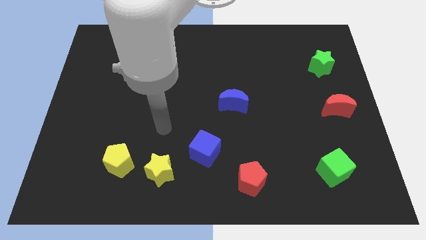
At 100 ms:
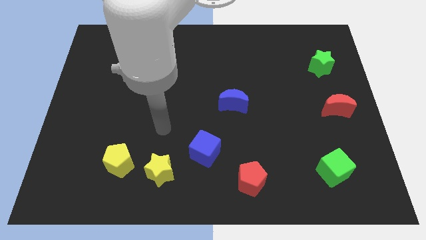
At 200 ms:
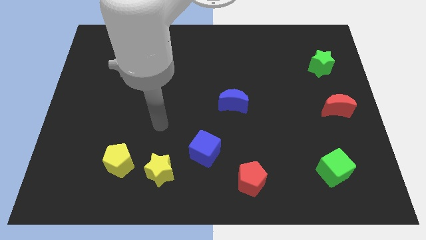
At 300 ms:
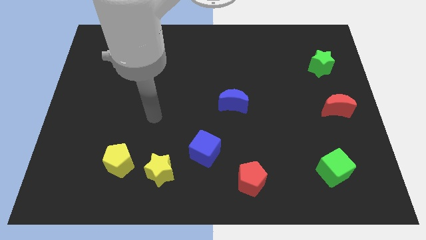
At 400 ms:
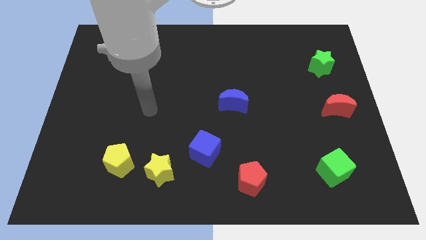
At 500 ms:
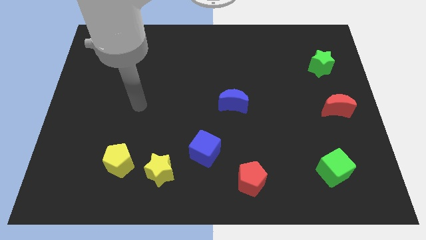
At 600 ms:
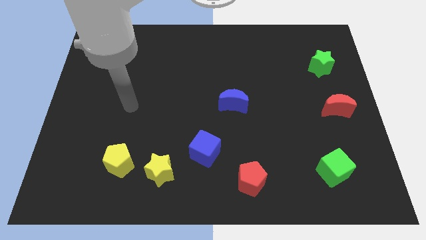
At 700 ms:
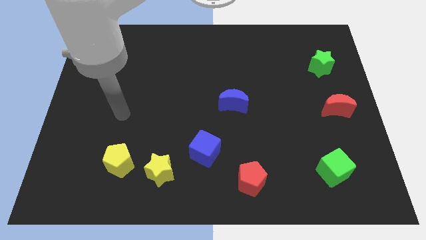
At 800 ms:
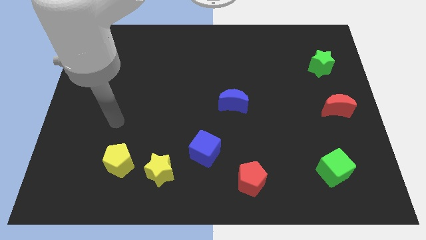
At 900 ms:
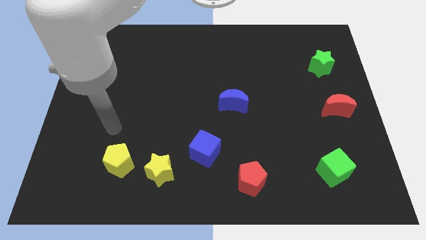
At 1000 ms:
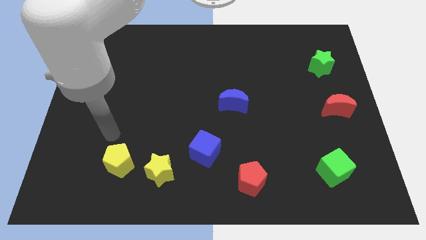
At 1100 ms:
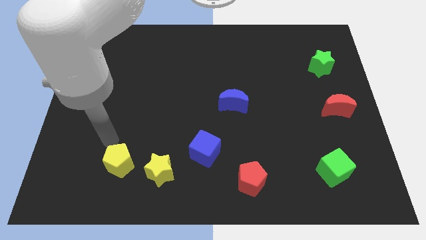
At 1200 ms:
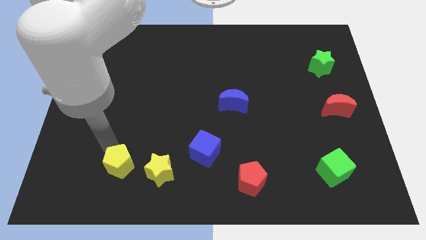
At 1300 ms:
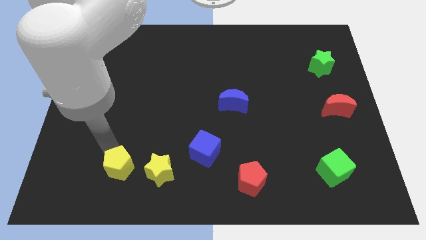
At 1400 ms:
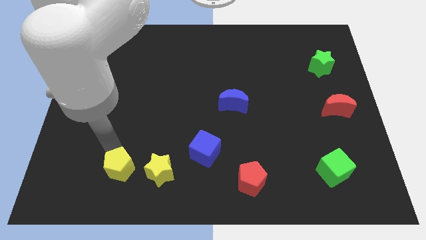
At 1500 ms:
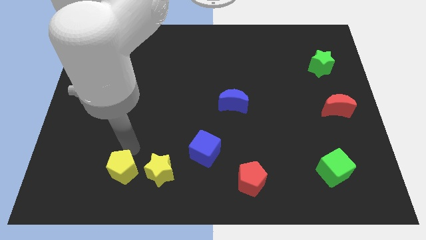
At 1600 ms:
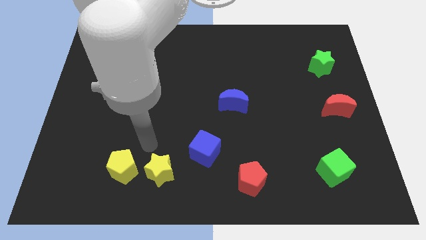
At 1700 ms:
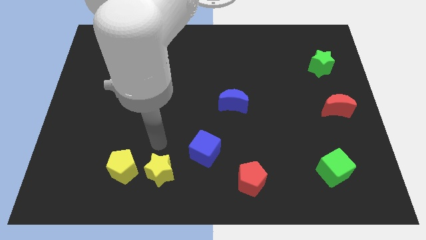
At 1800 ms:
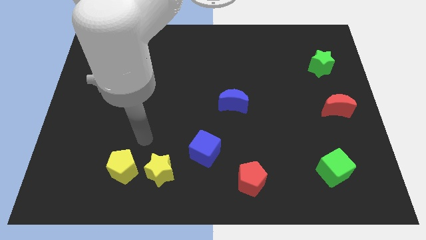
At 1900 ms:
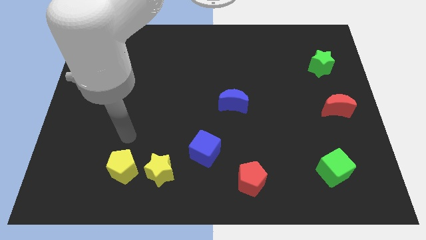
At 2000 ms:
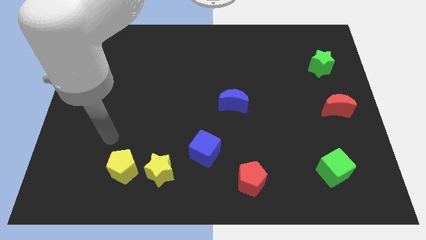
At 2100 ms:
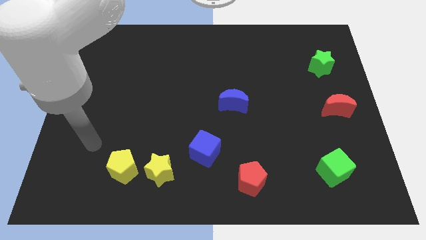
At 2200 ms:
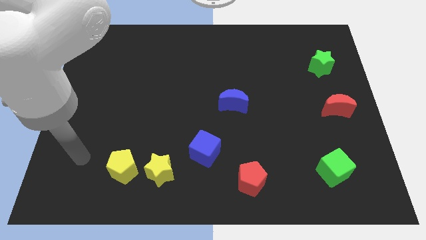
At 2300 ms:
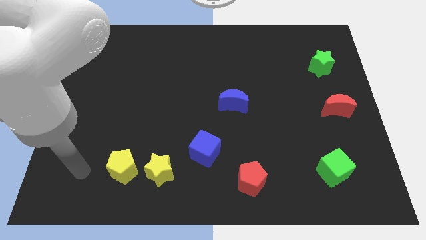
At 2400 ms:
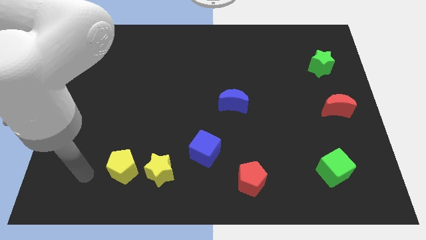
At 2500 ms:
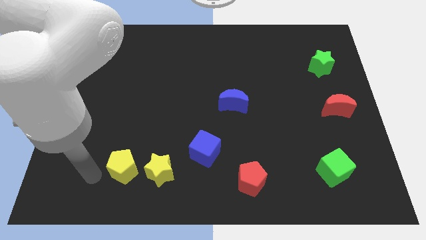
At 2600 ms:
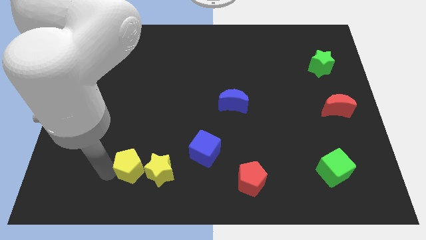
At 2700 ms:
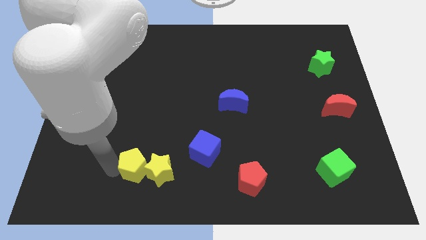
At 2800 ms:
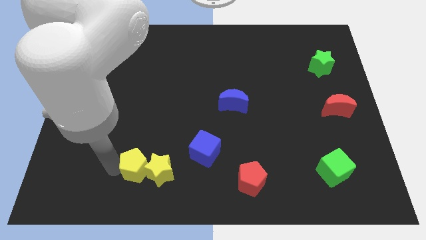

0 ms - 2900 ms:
push the yellow pentagon close to the yellow star

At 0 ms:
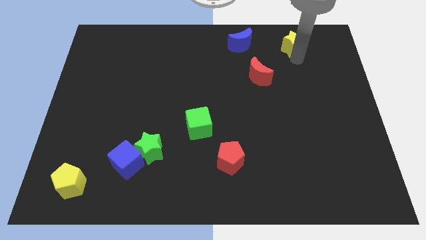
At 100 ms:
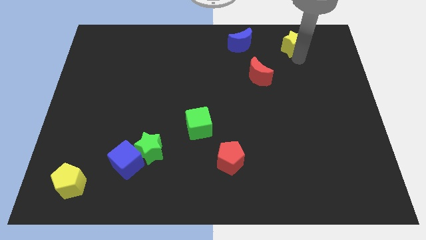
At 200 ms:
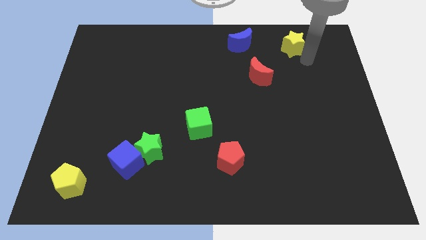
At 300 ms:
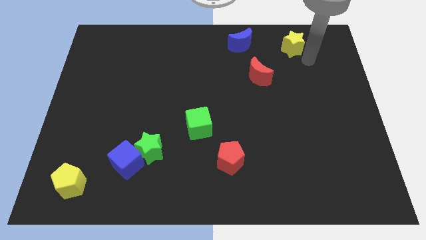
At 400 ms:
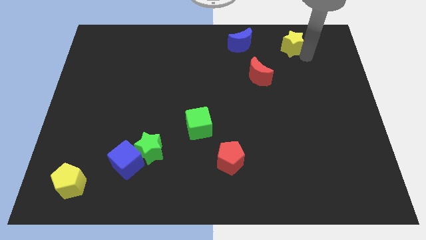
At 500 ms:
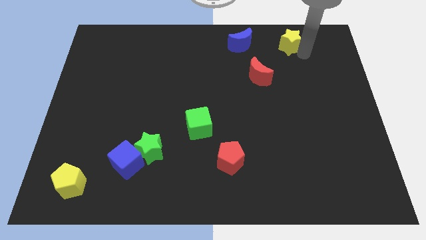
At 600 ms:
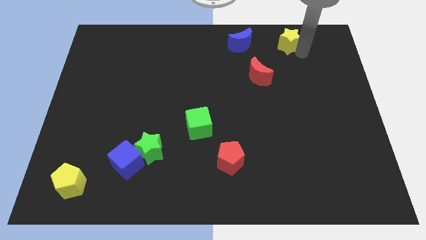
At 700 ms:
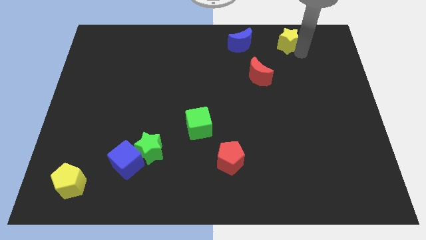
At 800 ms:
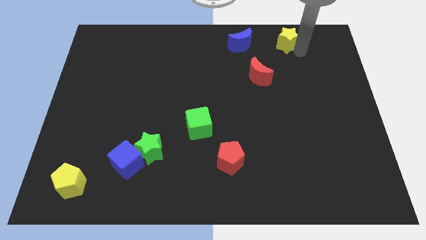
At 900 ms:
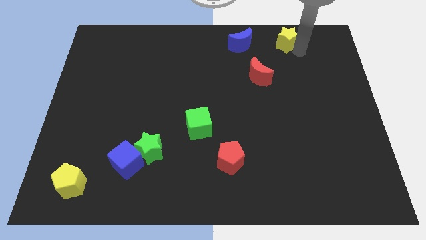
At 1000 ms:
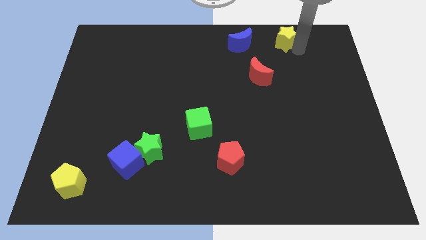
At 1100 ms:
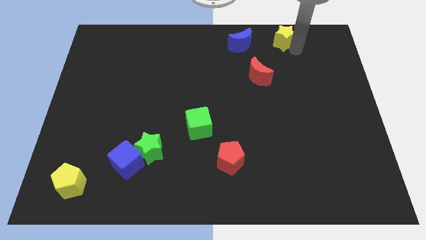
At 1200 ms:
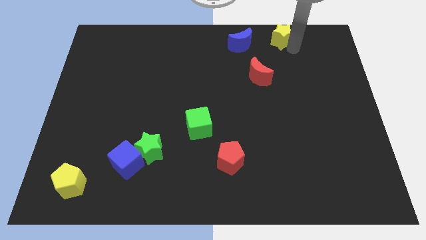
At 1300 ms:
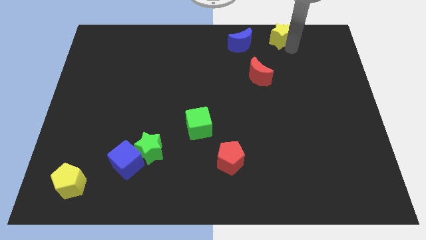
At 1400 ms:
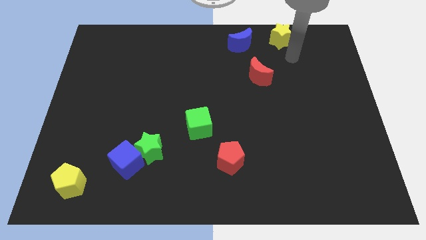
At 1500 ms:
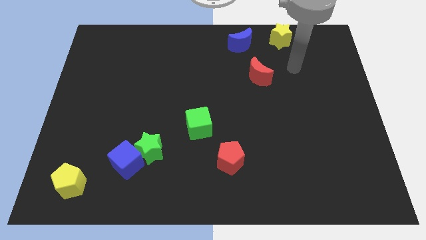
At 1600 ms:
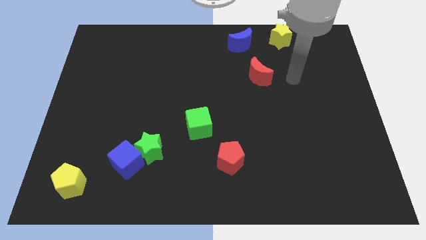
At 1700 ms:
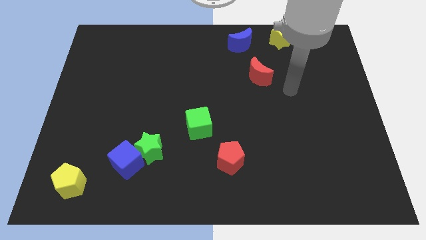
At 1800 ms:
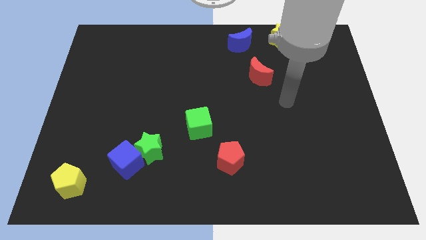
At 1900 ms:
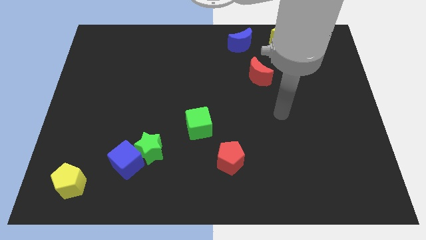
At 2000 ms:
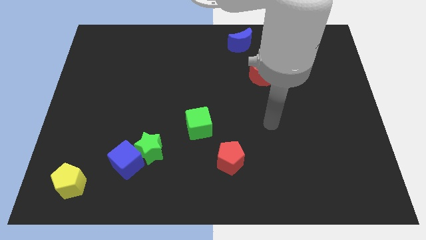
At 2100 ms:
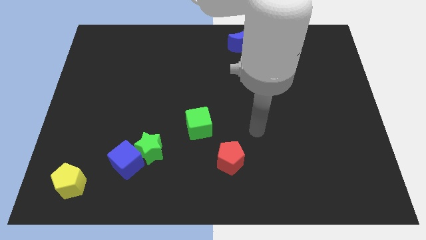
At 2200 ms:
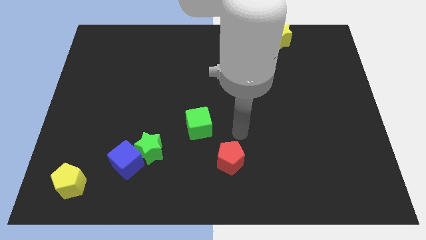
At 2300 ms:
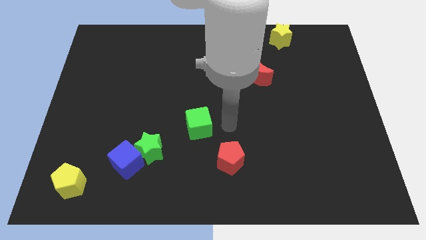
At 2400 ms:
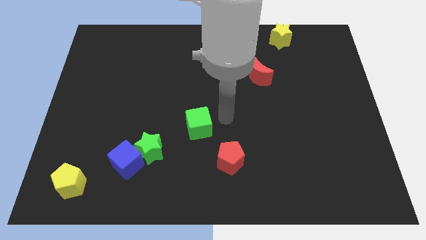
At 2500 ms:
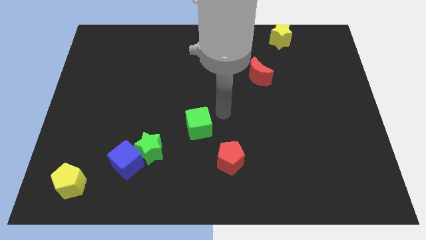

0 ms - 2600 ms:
slightly move the yellow star upwards

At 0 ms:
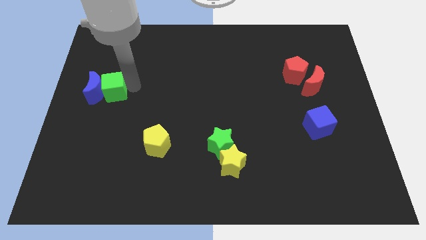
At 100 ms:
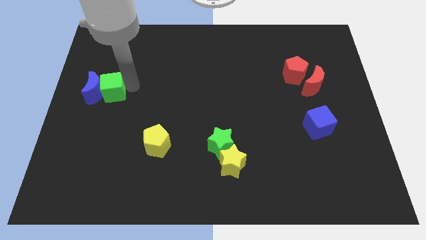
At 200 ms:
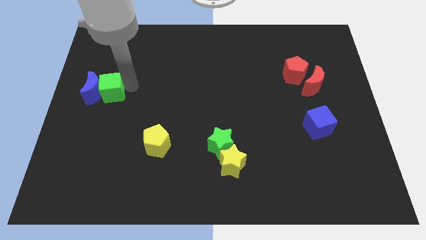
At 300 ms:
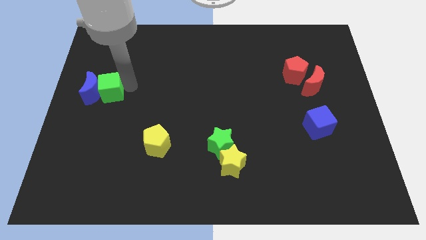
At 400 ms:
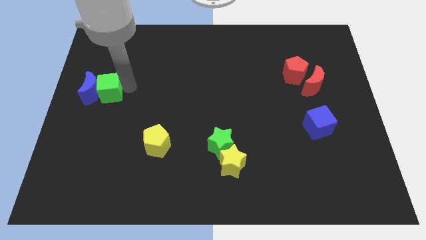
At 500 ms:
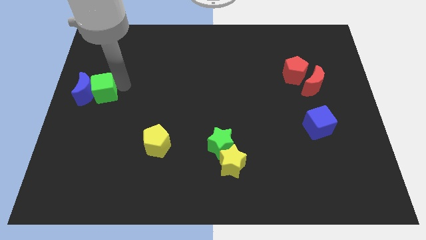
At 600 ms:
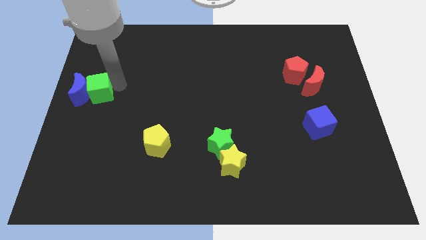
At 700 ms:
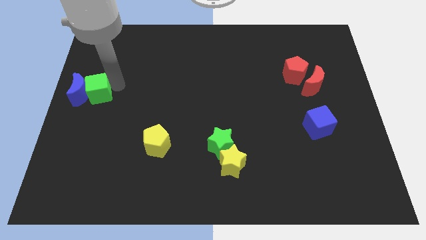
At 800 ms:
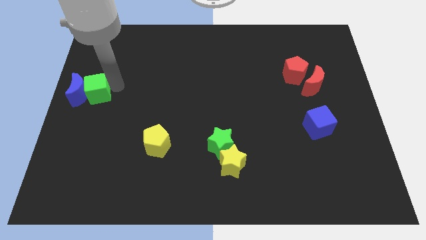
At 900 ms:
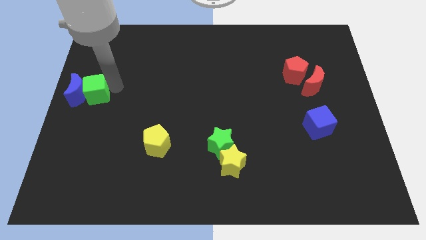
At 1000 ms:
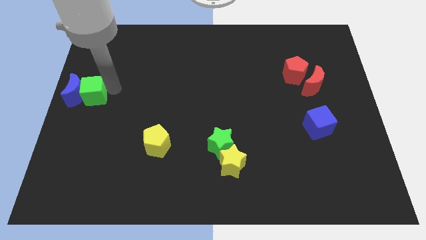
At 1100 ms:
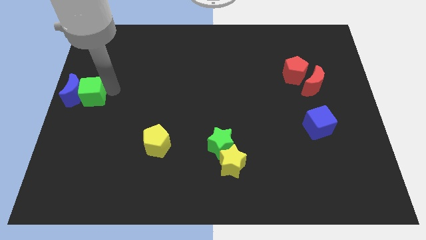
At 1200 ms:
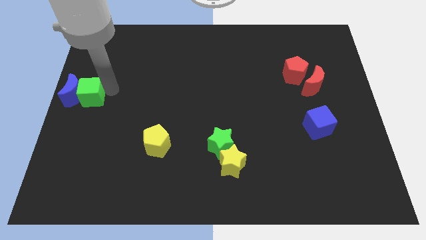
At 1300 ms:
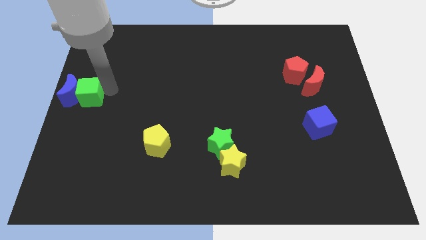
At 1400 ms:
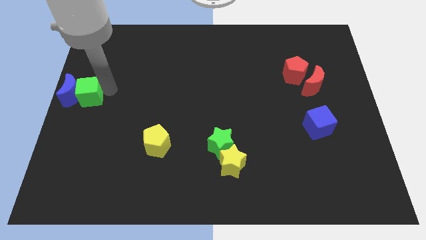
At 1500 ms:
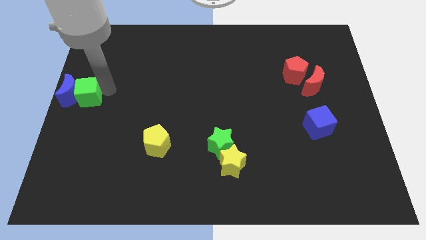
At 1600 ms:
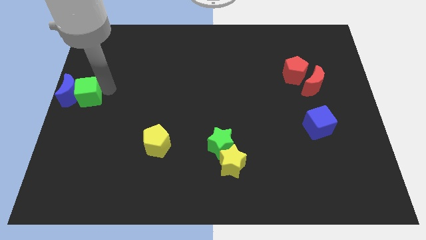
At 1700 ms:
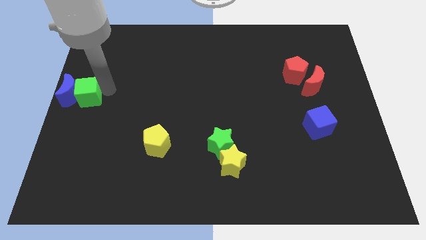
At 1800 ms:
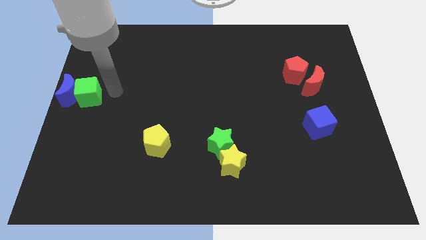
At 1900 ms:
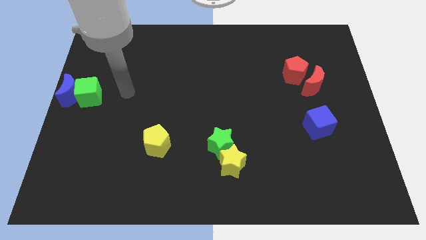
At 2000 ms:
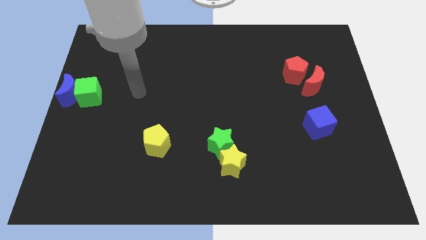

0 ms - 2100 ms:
push the blue crescent with the green cube towards the left center of the board

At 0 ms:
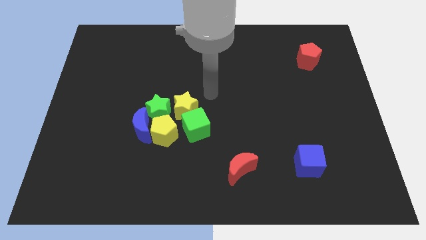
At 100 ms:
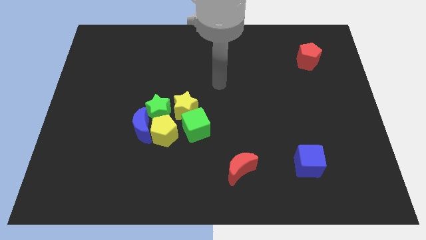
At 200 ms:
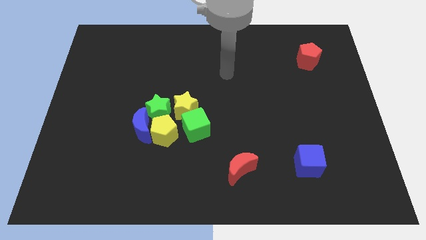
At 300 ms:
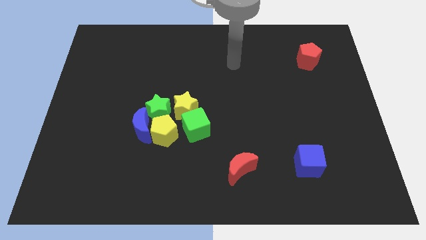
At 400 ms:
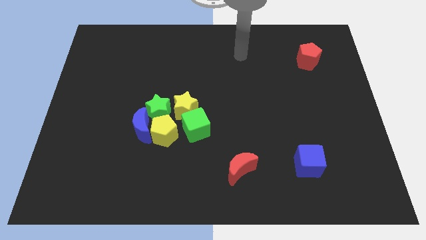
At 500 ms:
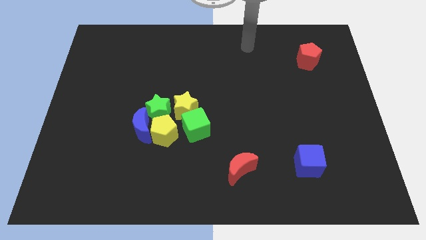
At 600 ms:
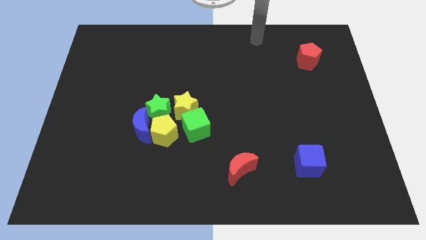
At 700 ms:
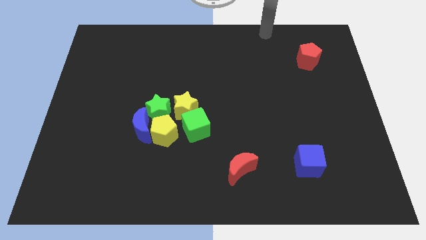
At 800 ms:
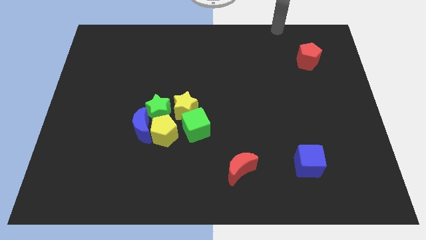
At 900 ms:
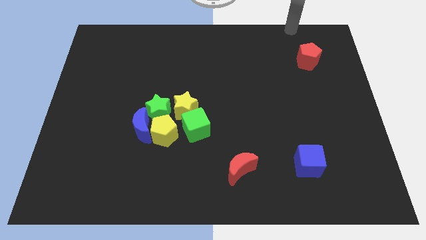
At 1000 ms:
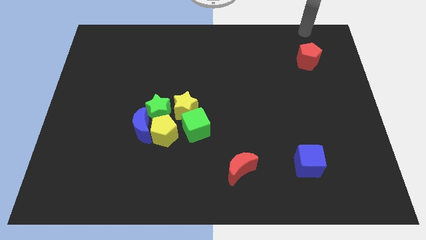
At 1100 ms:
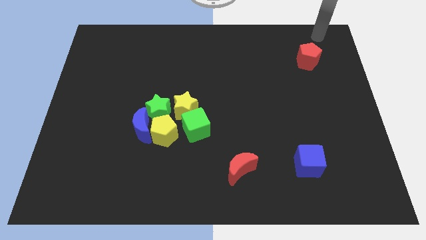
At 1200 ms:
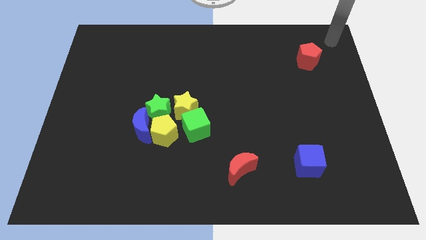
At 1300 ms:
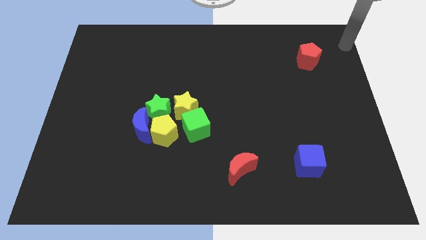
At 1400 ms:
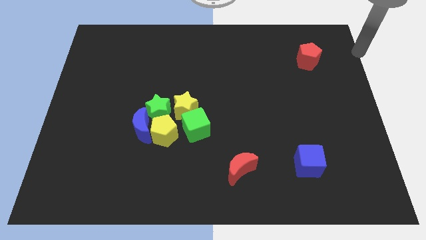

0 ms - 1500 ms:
move the arm away from the yellow star
